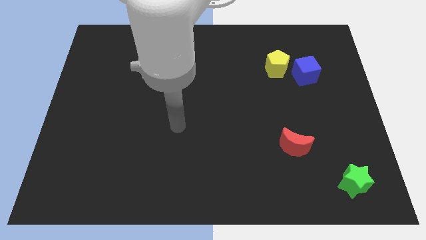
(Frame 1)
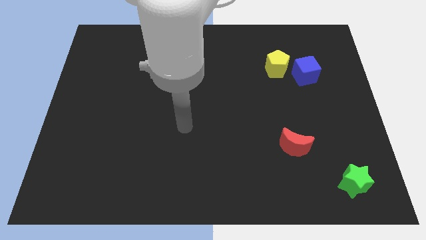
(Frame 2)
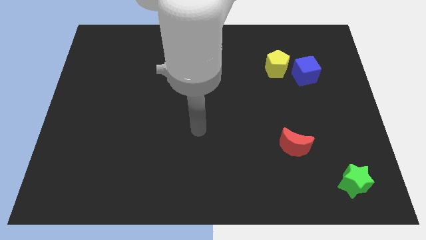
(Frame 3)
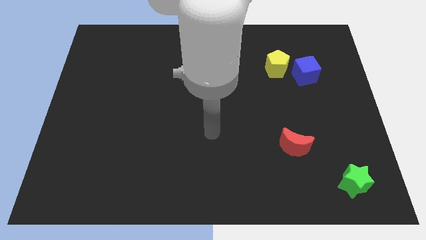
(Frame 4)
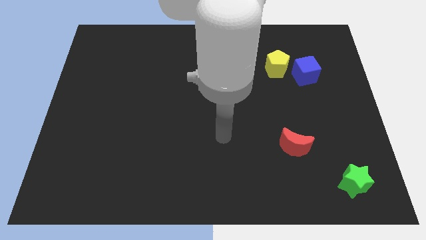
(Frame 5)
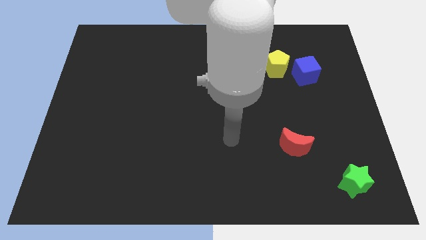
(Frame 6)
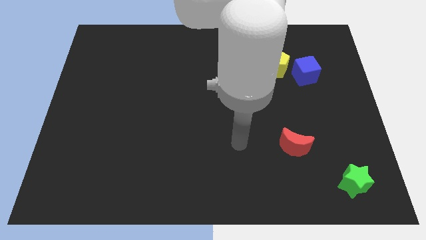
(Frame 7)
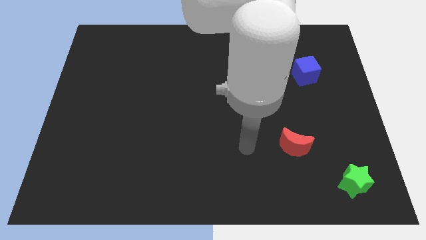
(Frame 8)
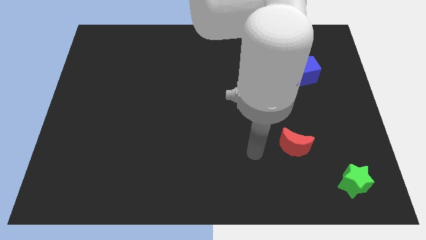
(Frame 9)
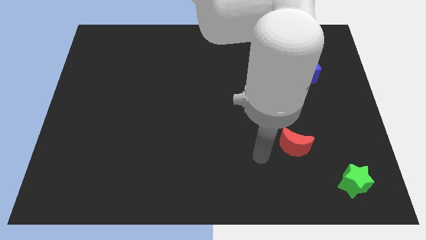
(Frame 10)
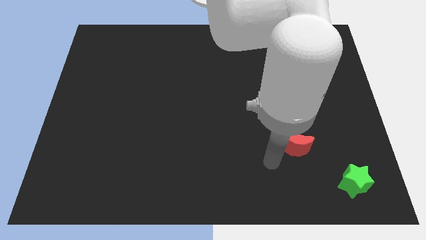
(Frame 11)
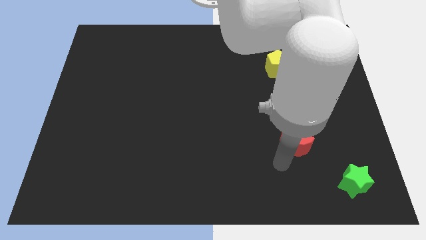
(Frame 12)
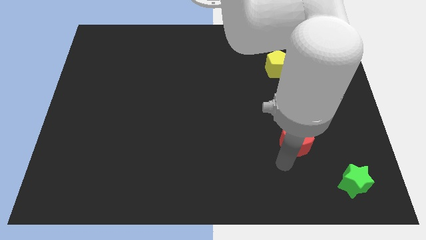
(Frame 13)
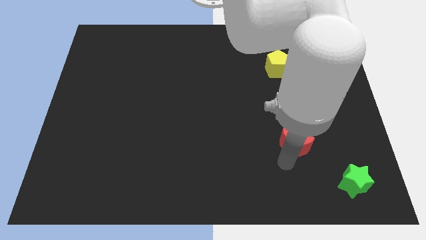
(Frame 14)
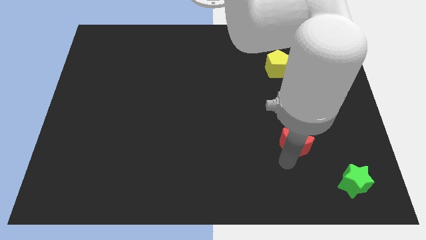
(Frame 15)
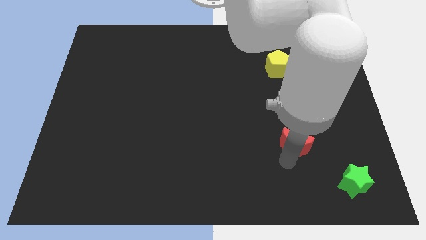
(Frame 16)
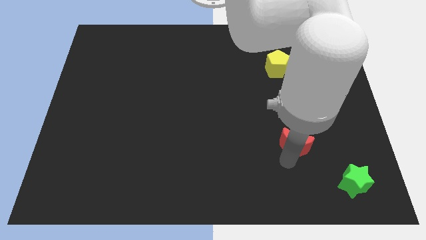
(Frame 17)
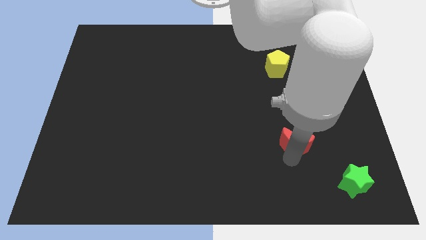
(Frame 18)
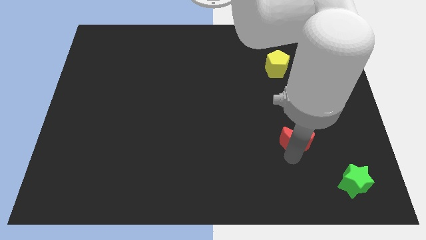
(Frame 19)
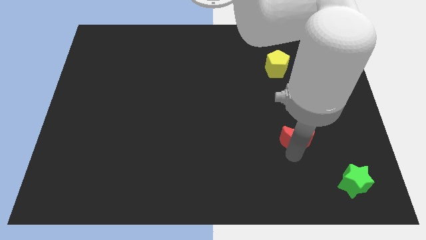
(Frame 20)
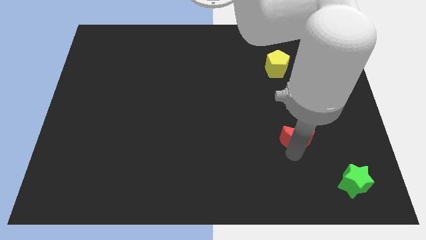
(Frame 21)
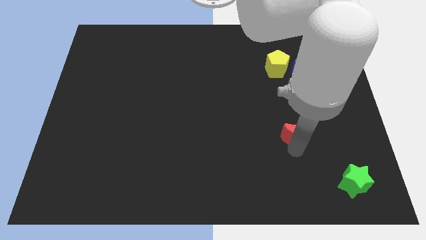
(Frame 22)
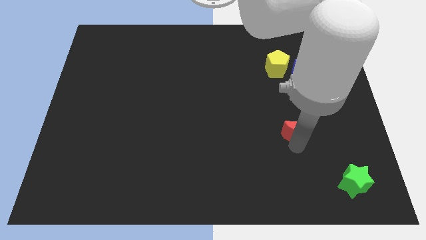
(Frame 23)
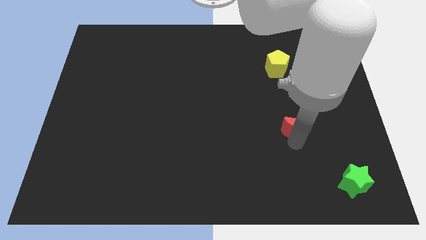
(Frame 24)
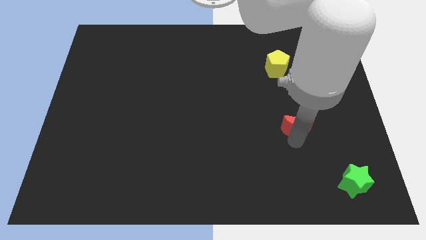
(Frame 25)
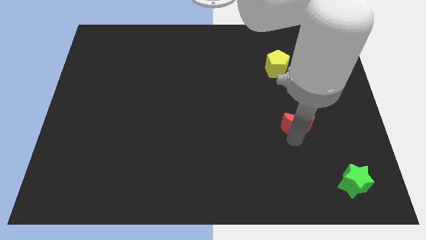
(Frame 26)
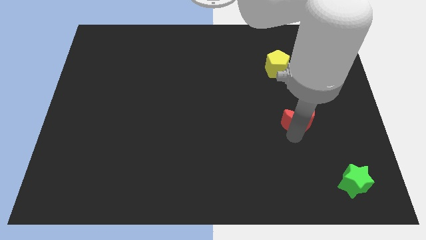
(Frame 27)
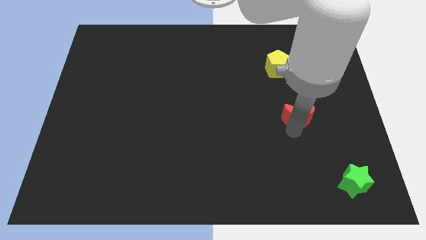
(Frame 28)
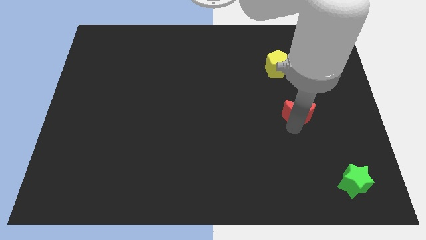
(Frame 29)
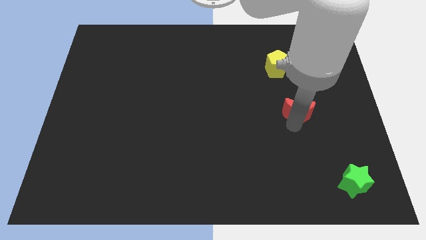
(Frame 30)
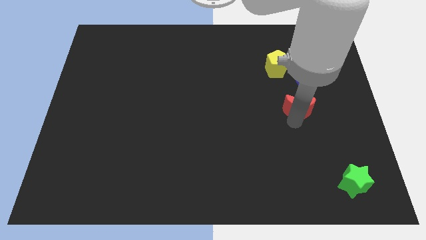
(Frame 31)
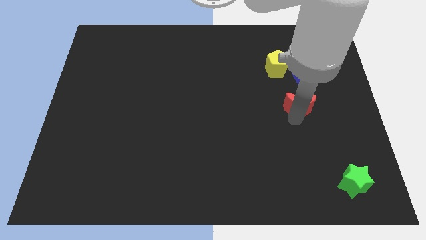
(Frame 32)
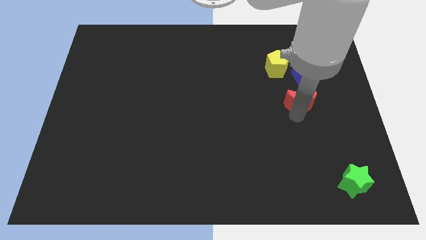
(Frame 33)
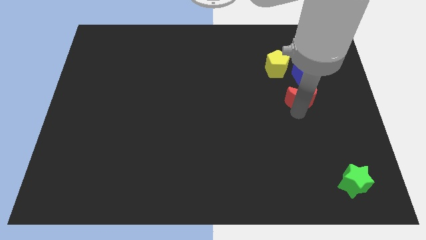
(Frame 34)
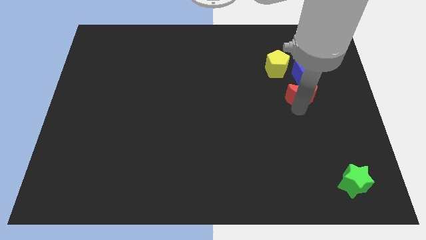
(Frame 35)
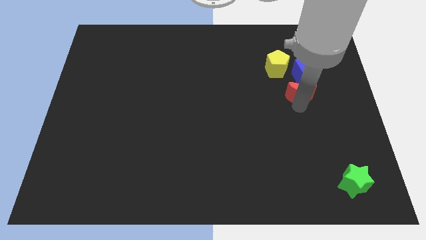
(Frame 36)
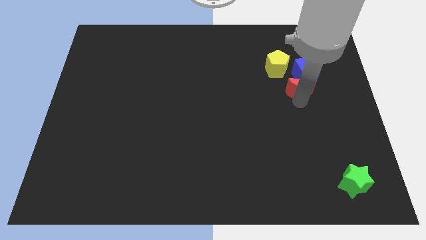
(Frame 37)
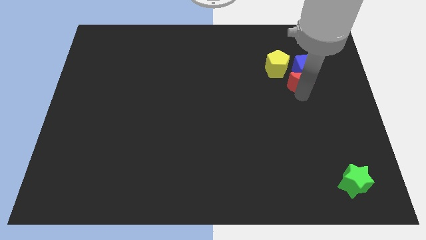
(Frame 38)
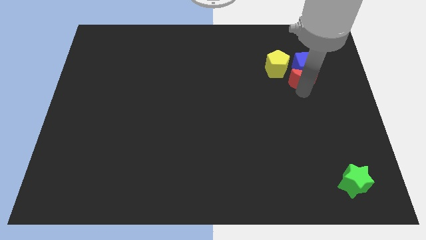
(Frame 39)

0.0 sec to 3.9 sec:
slide the red block close to the blue cube

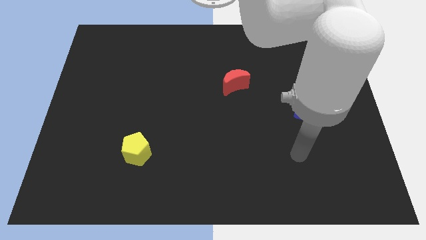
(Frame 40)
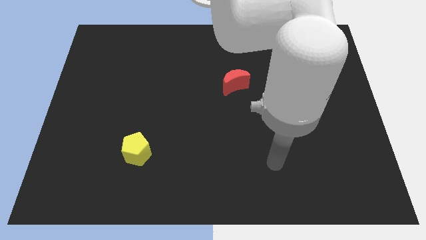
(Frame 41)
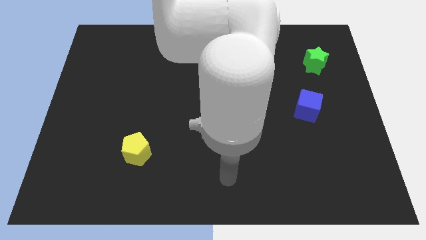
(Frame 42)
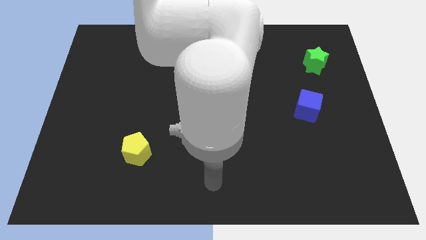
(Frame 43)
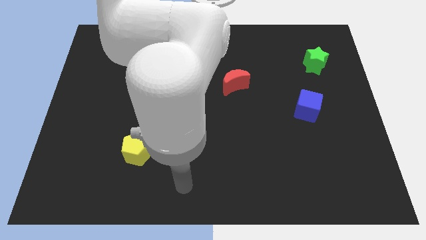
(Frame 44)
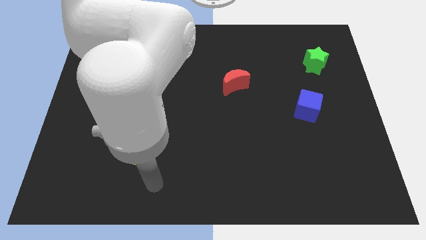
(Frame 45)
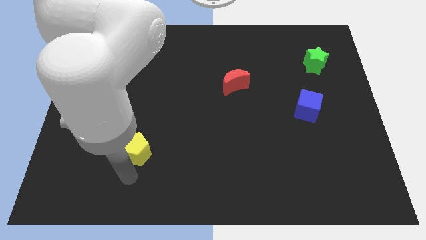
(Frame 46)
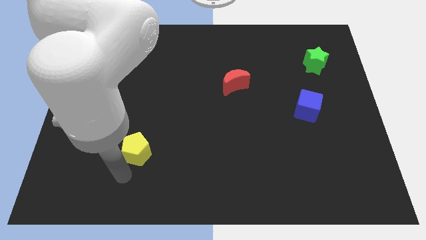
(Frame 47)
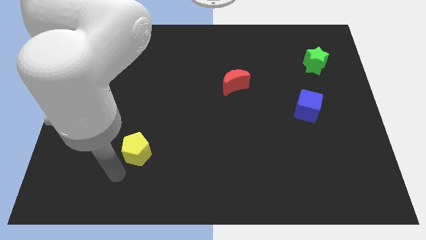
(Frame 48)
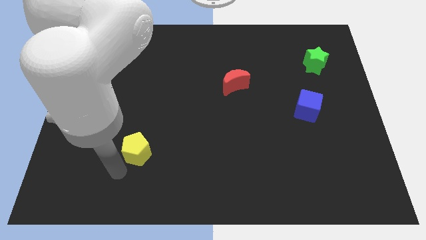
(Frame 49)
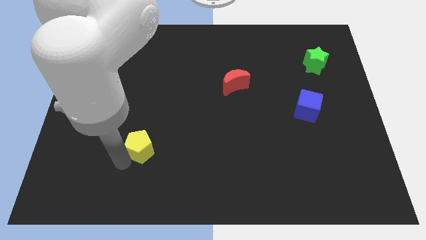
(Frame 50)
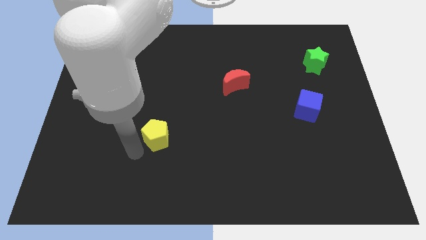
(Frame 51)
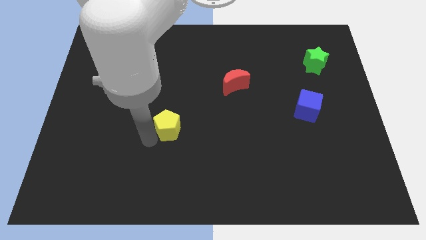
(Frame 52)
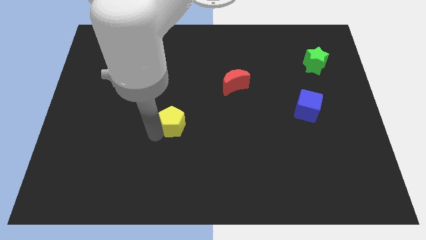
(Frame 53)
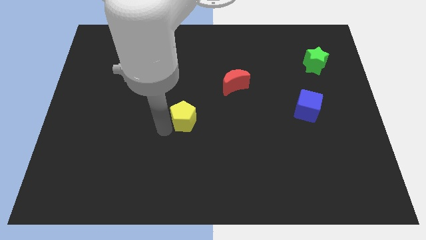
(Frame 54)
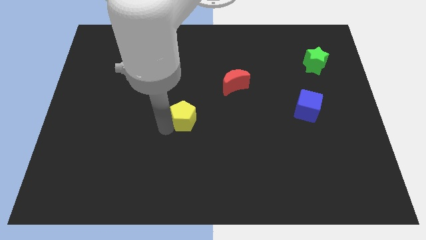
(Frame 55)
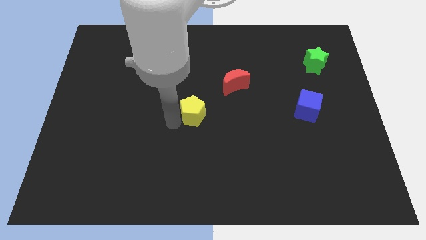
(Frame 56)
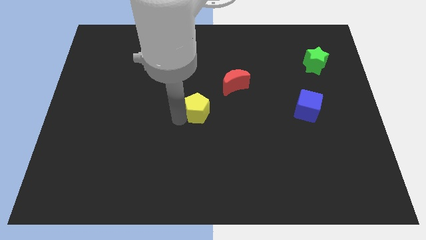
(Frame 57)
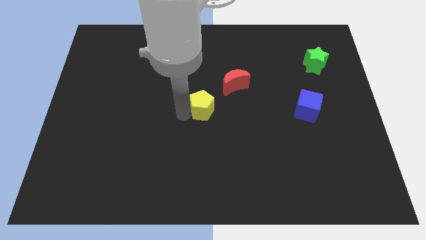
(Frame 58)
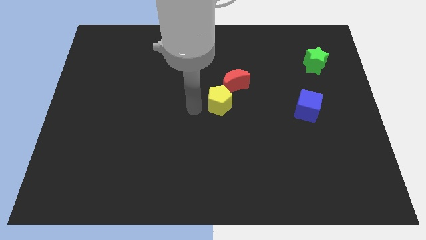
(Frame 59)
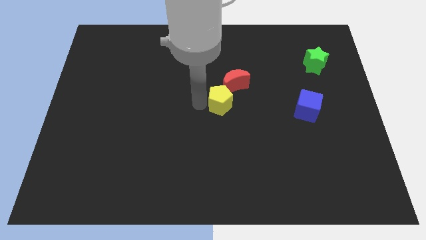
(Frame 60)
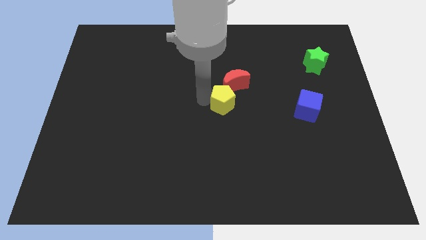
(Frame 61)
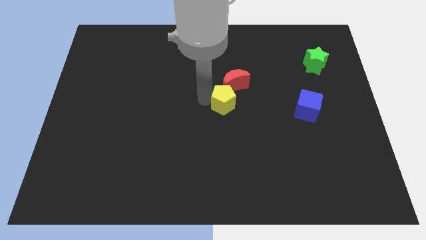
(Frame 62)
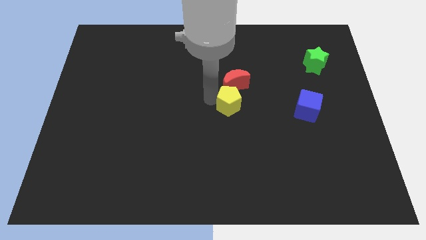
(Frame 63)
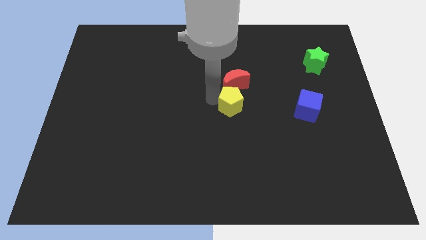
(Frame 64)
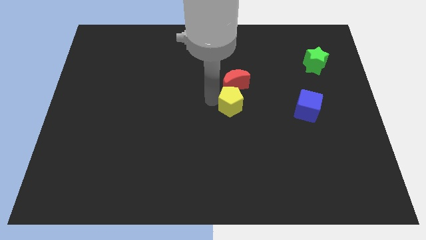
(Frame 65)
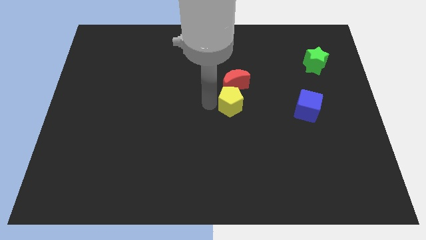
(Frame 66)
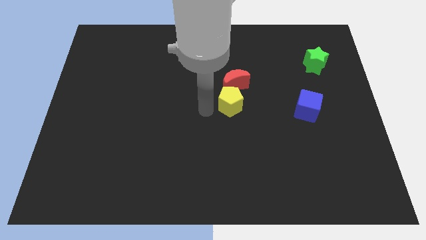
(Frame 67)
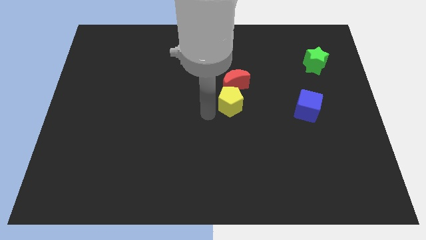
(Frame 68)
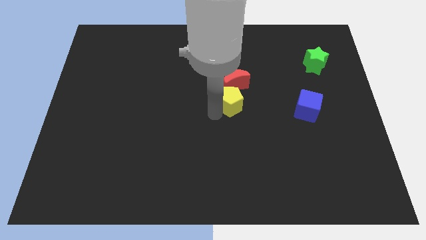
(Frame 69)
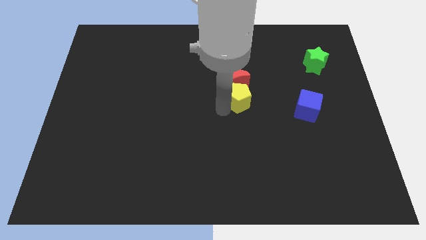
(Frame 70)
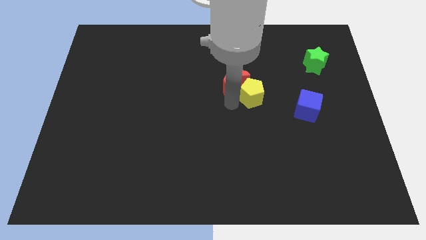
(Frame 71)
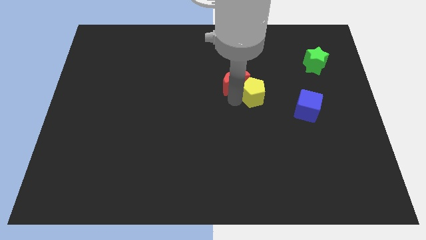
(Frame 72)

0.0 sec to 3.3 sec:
move the yellow pentagon towards the red block

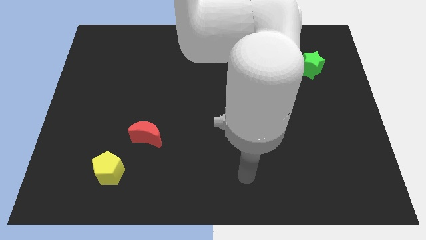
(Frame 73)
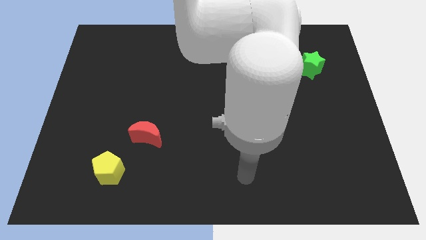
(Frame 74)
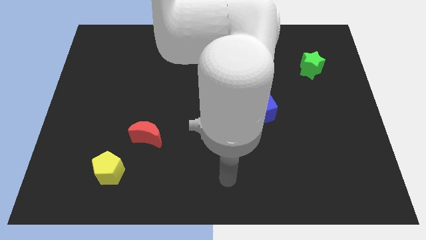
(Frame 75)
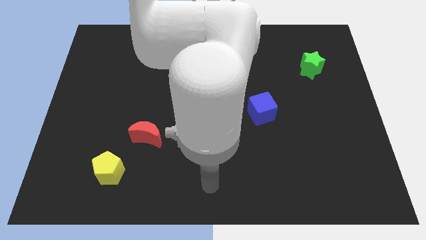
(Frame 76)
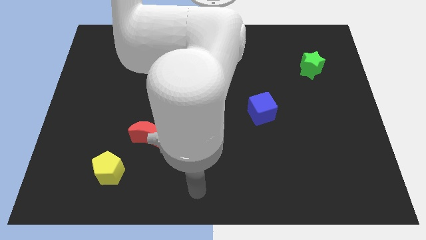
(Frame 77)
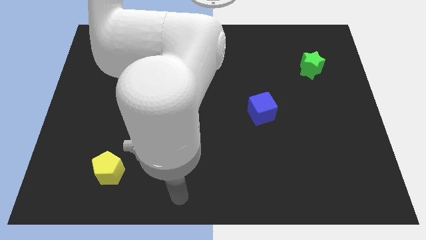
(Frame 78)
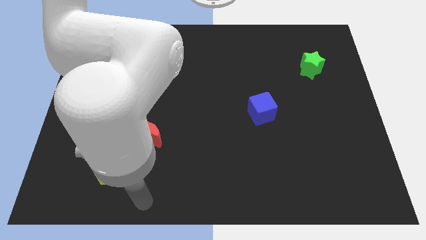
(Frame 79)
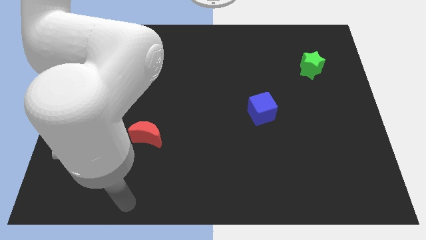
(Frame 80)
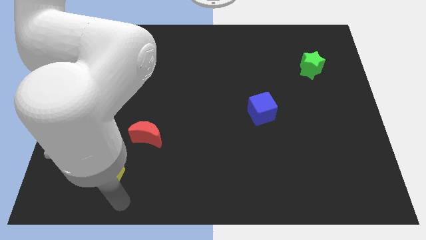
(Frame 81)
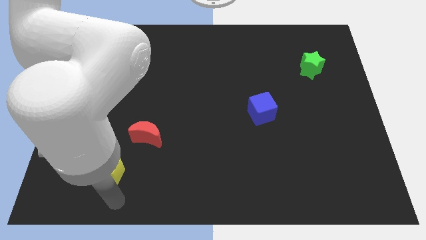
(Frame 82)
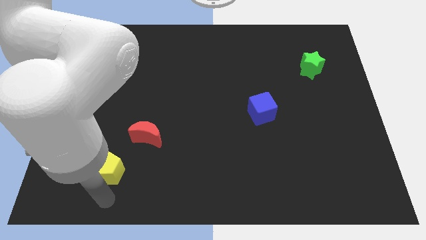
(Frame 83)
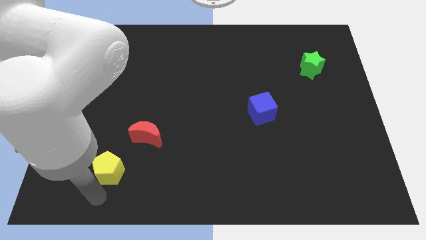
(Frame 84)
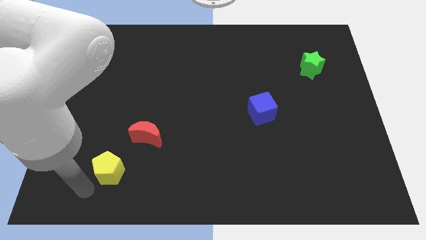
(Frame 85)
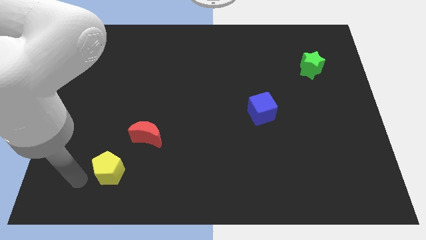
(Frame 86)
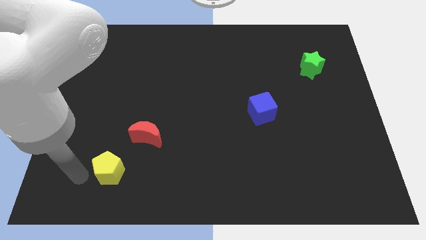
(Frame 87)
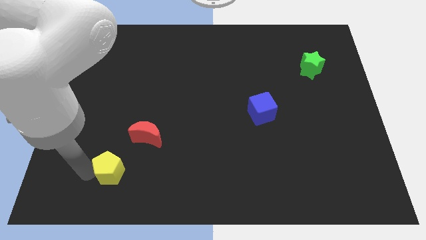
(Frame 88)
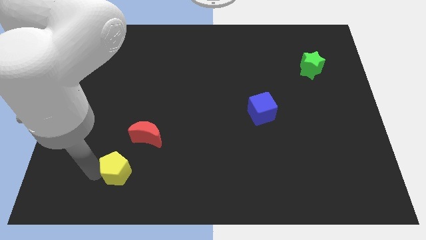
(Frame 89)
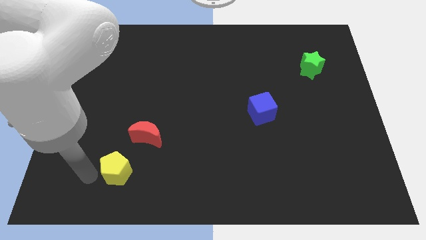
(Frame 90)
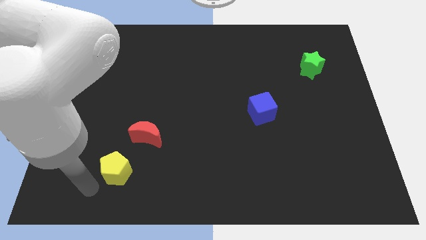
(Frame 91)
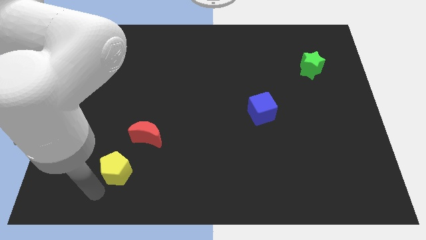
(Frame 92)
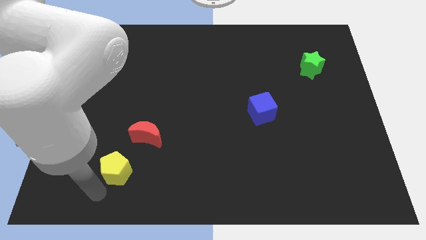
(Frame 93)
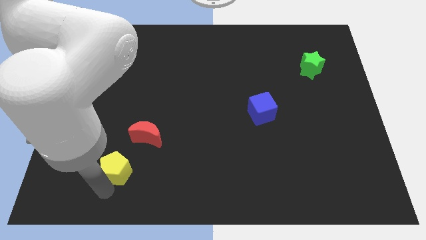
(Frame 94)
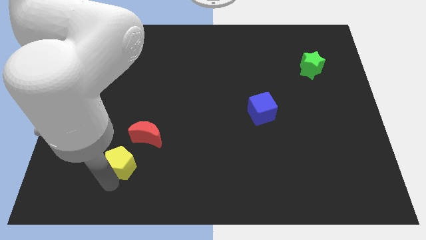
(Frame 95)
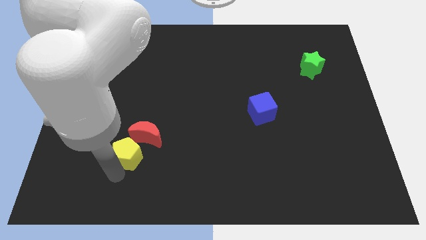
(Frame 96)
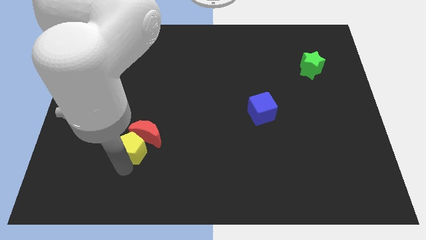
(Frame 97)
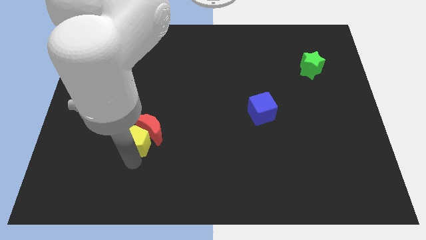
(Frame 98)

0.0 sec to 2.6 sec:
move the yellow pentagon close to the moon
